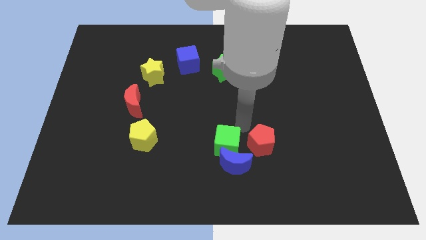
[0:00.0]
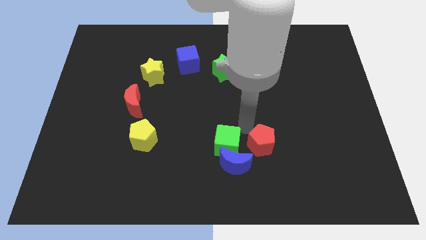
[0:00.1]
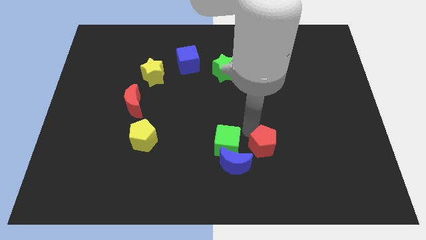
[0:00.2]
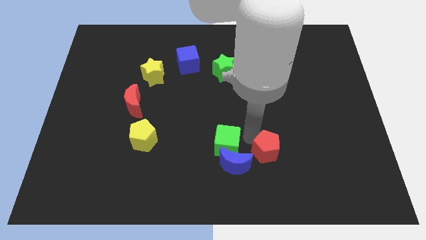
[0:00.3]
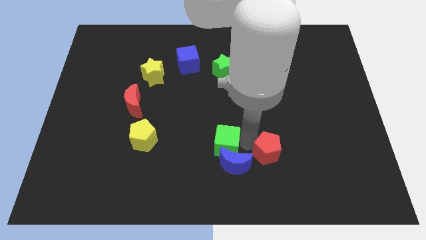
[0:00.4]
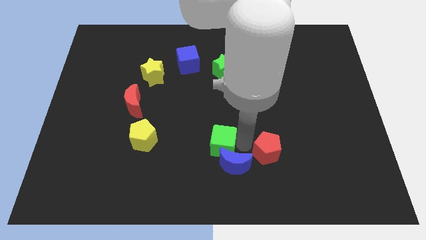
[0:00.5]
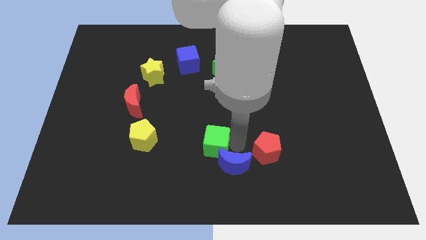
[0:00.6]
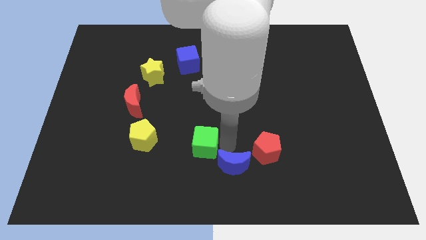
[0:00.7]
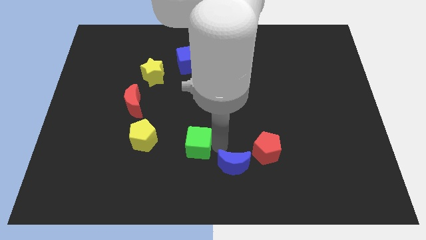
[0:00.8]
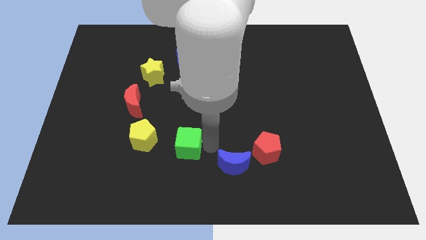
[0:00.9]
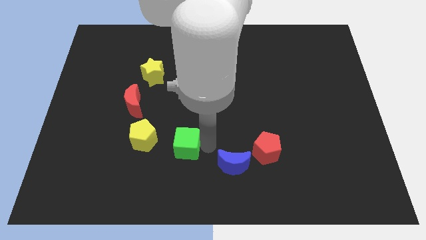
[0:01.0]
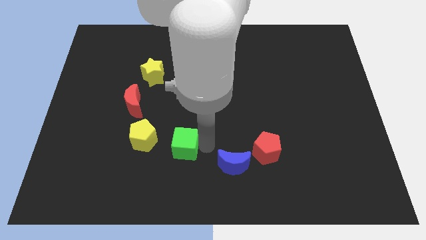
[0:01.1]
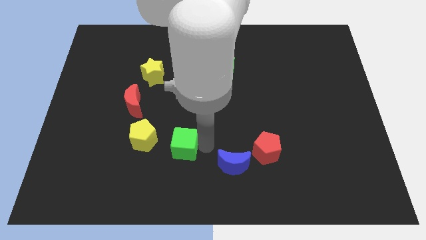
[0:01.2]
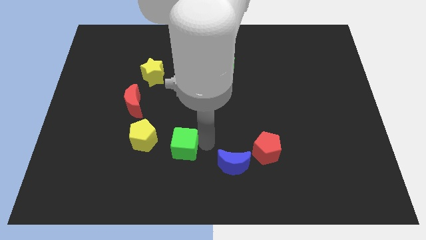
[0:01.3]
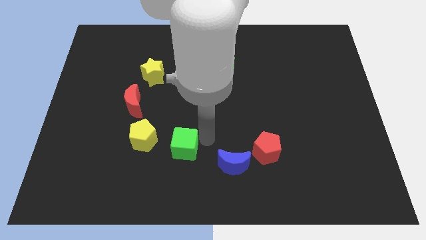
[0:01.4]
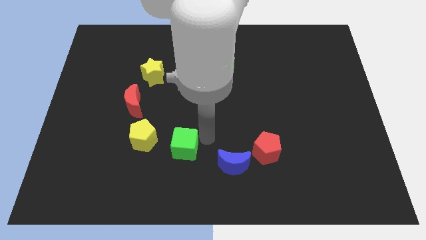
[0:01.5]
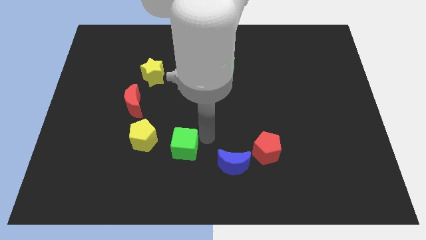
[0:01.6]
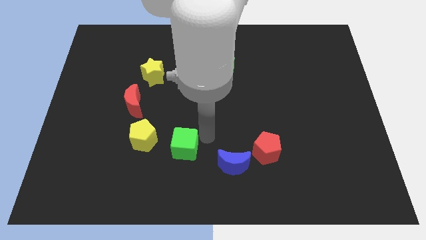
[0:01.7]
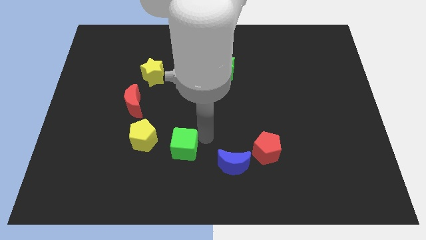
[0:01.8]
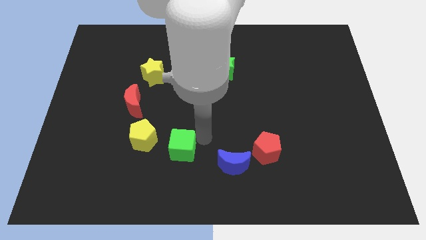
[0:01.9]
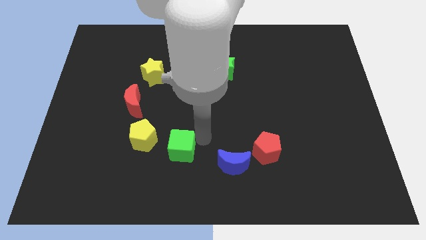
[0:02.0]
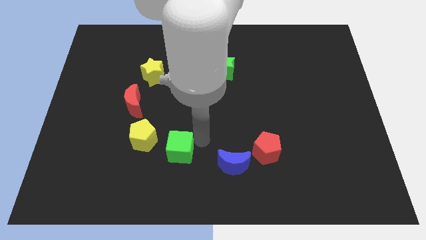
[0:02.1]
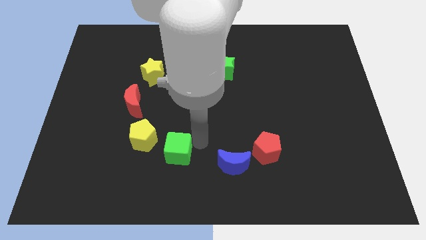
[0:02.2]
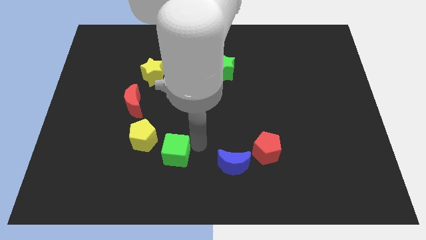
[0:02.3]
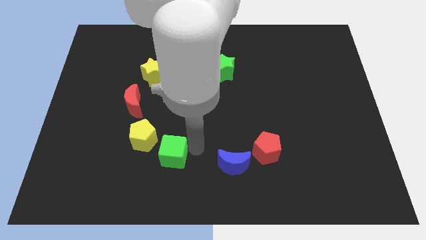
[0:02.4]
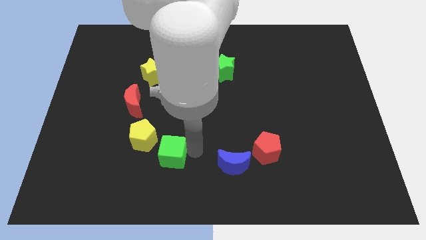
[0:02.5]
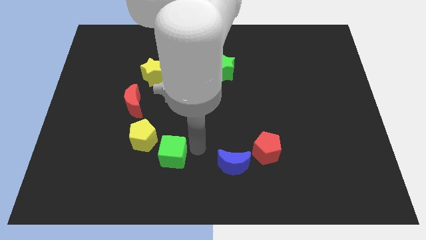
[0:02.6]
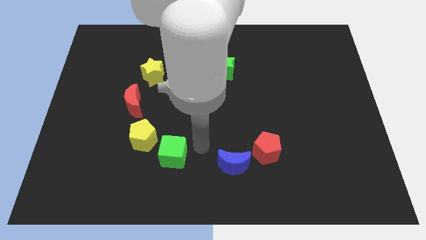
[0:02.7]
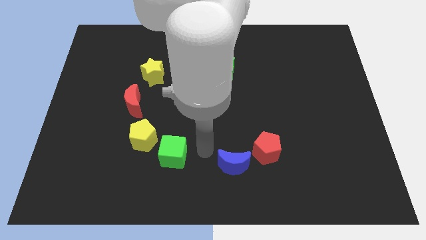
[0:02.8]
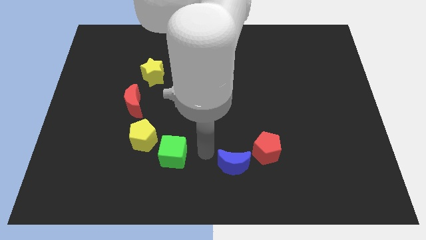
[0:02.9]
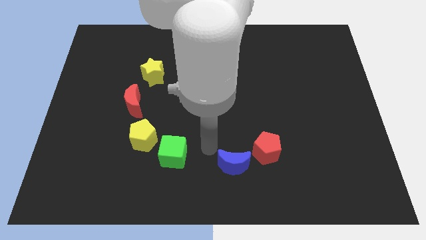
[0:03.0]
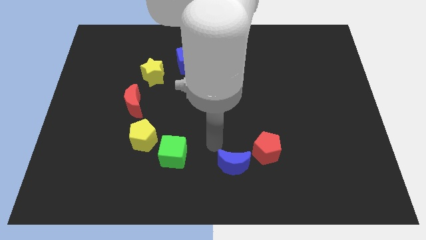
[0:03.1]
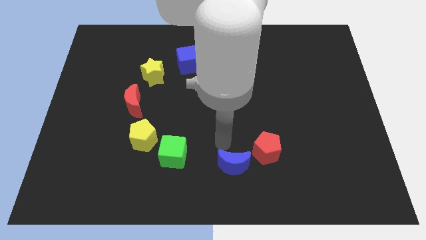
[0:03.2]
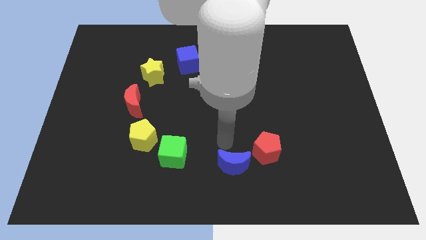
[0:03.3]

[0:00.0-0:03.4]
move green cube to the right side of the yellow pentagon

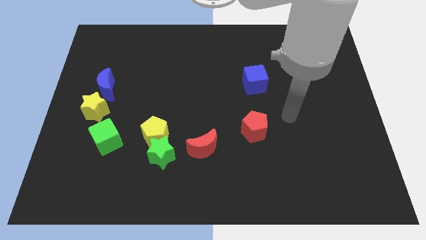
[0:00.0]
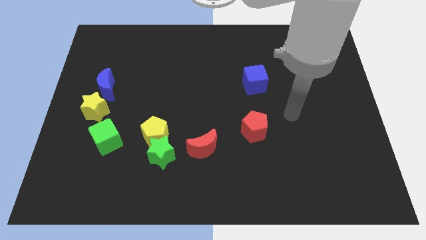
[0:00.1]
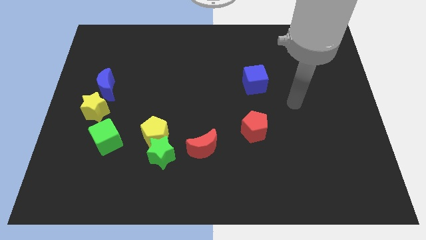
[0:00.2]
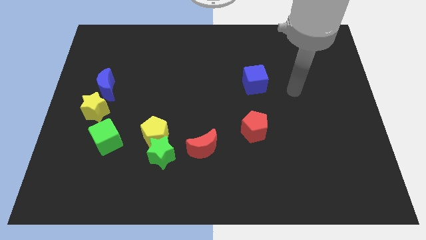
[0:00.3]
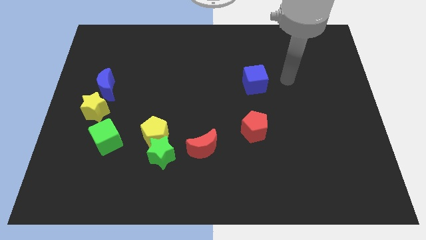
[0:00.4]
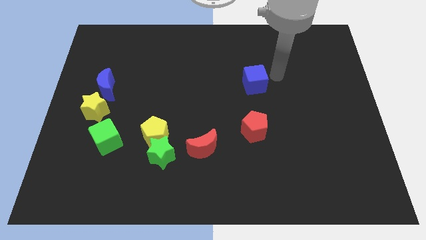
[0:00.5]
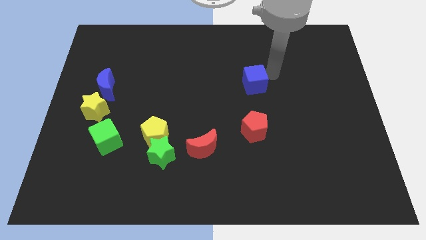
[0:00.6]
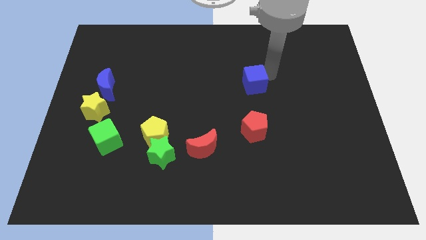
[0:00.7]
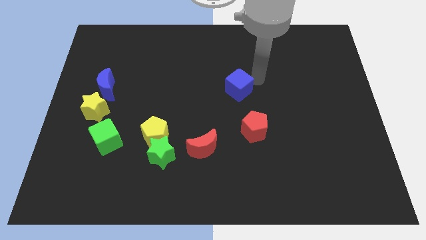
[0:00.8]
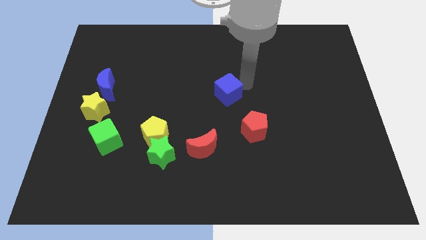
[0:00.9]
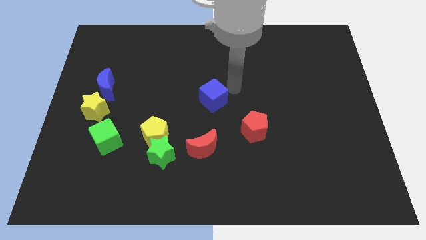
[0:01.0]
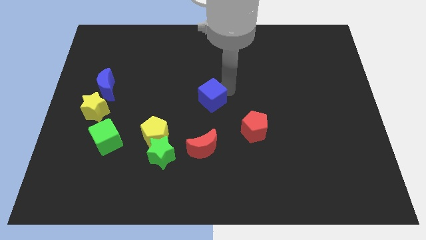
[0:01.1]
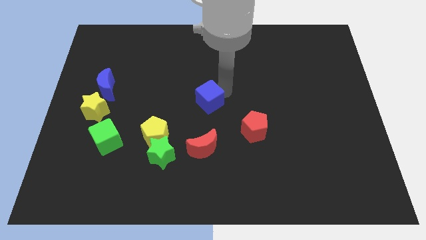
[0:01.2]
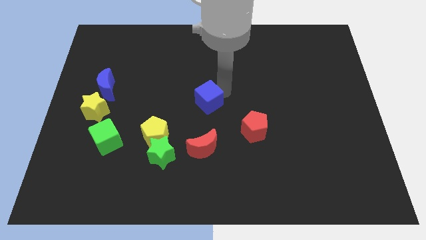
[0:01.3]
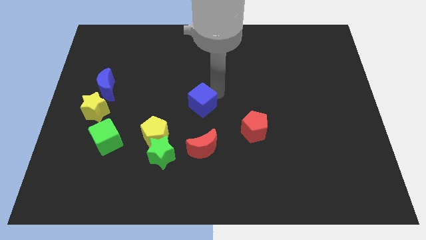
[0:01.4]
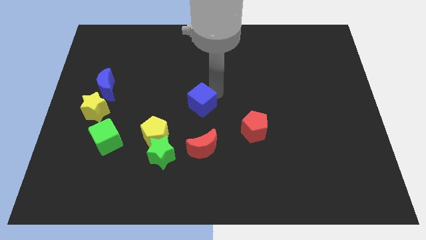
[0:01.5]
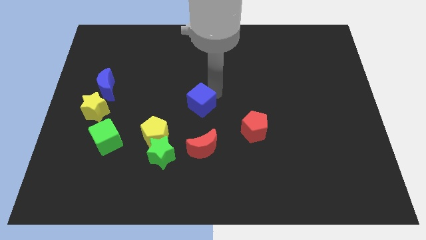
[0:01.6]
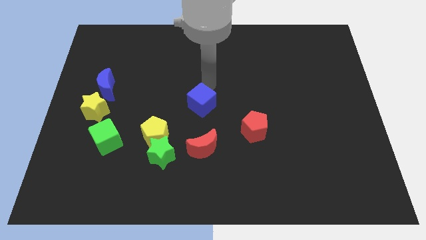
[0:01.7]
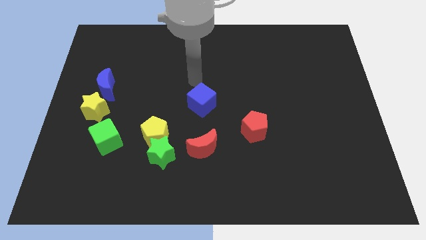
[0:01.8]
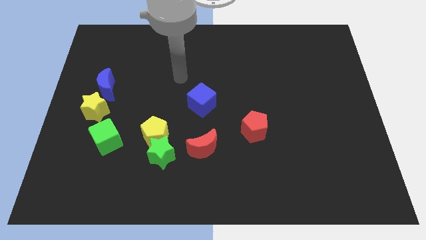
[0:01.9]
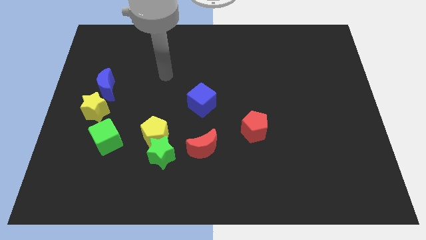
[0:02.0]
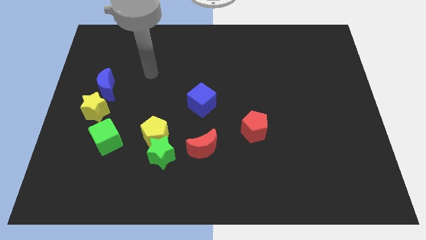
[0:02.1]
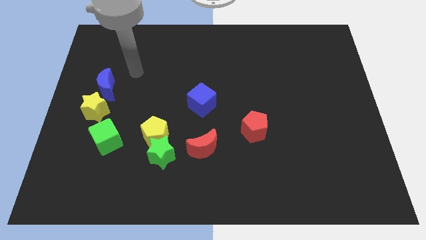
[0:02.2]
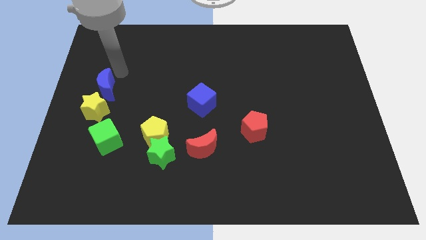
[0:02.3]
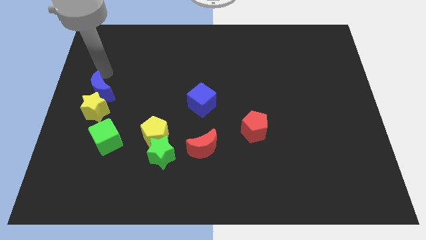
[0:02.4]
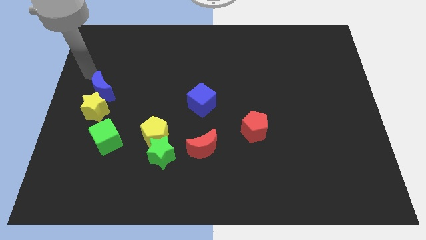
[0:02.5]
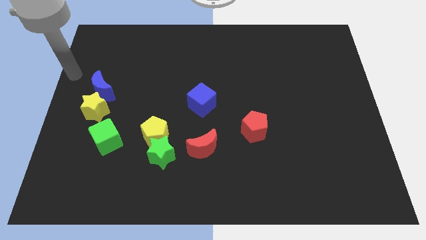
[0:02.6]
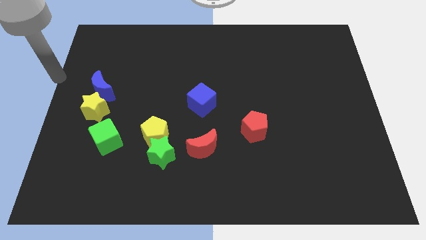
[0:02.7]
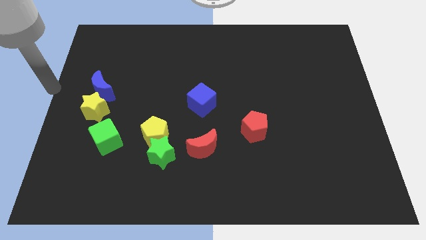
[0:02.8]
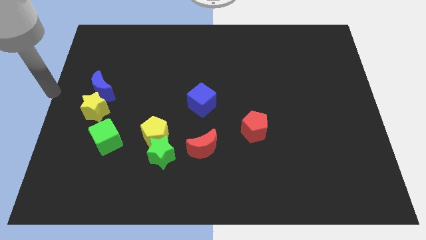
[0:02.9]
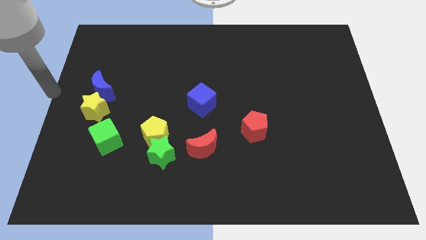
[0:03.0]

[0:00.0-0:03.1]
slide blue blocks slightly to the left

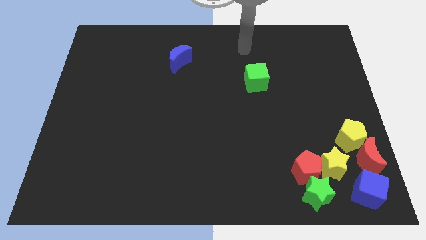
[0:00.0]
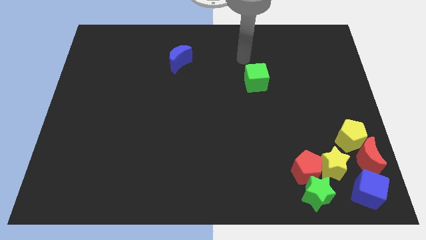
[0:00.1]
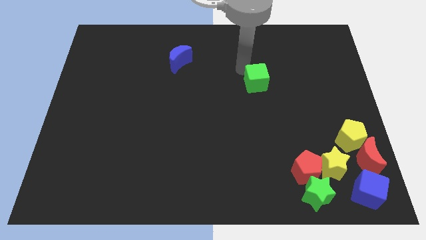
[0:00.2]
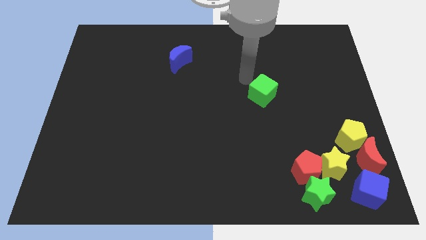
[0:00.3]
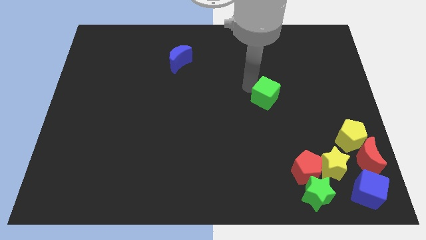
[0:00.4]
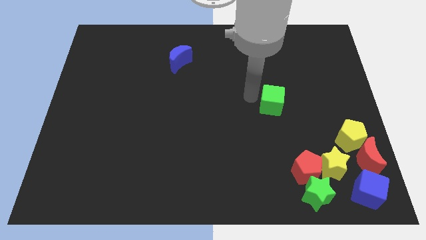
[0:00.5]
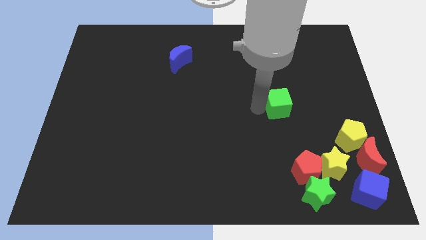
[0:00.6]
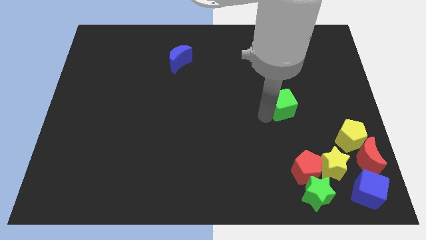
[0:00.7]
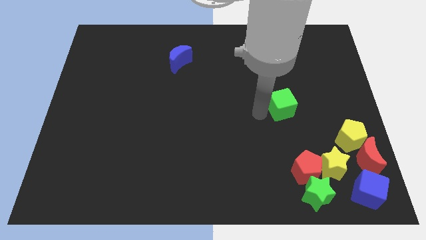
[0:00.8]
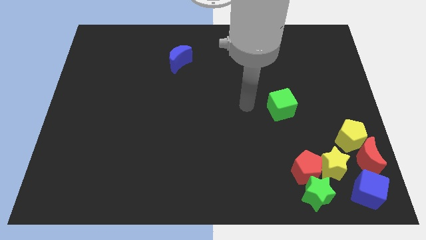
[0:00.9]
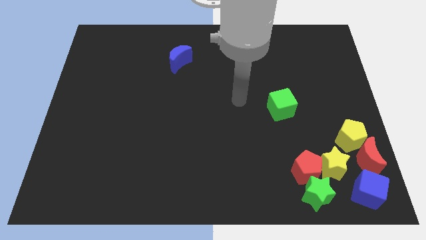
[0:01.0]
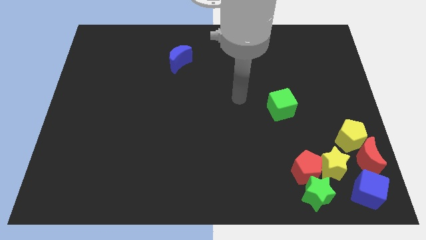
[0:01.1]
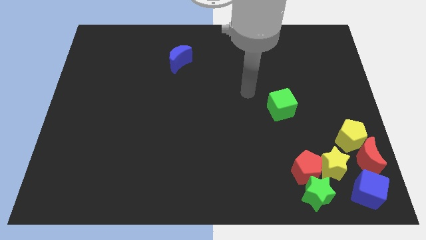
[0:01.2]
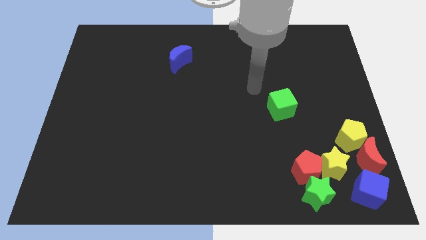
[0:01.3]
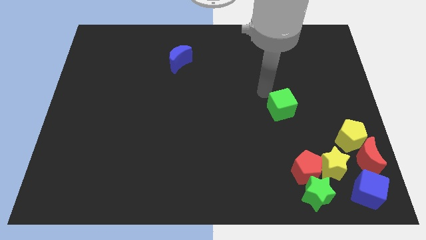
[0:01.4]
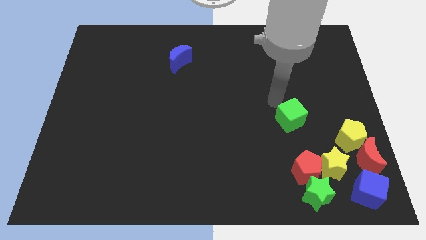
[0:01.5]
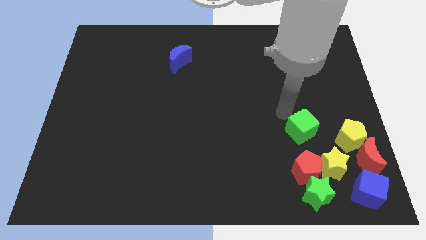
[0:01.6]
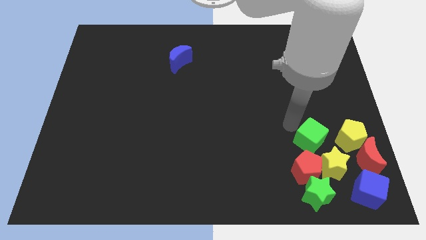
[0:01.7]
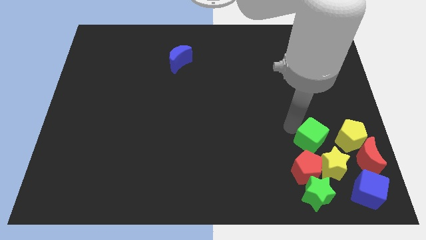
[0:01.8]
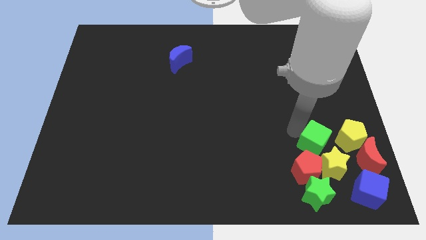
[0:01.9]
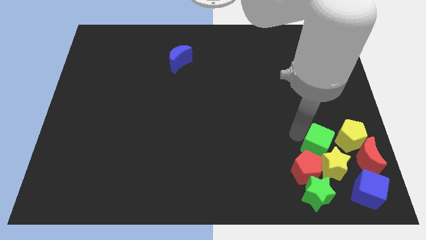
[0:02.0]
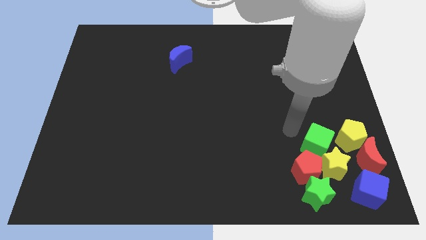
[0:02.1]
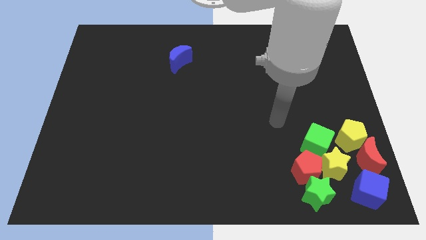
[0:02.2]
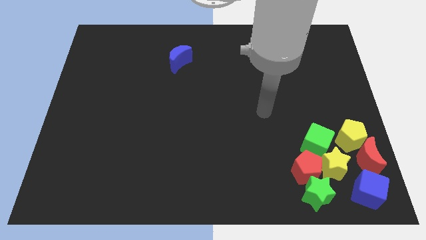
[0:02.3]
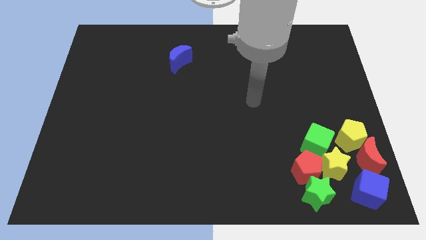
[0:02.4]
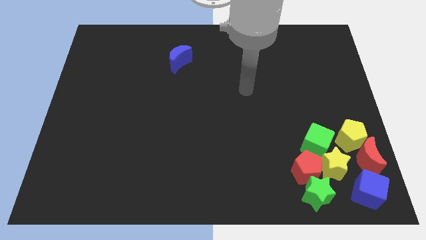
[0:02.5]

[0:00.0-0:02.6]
move the green cube in between top of the yellow star red pentagon
